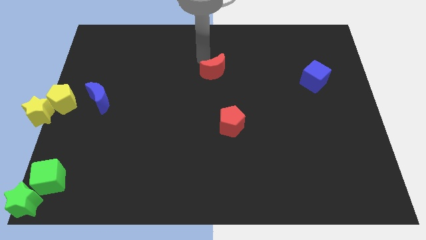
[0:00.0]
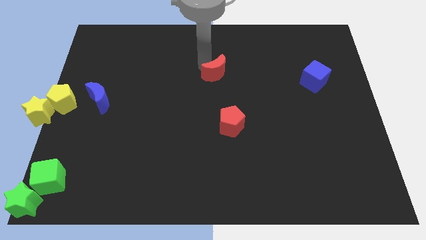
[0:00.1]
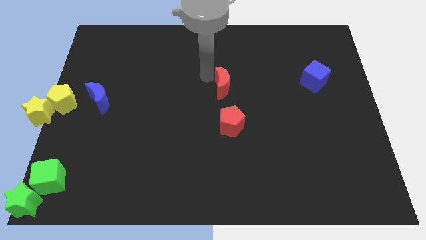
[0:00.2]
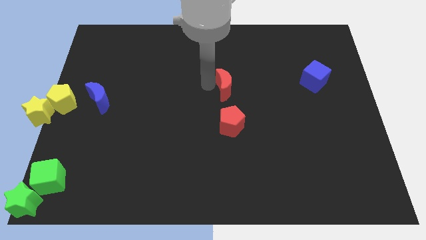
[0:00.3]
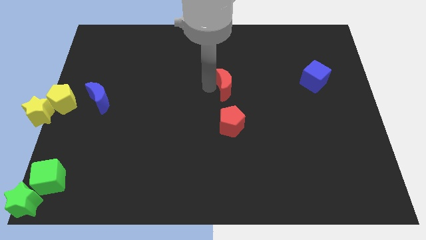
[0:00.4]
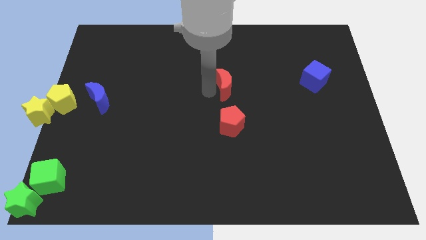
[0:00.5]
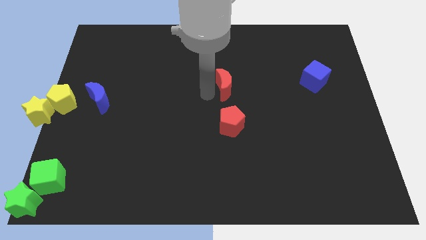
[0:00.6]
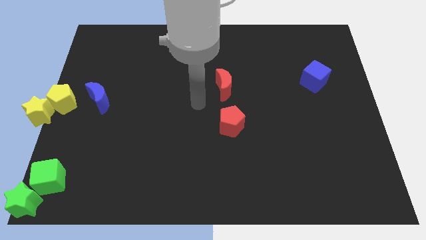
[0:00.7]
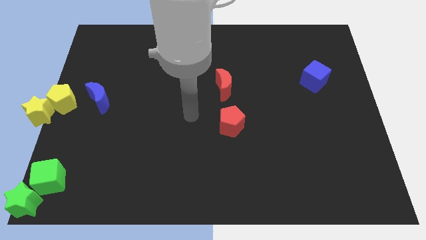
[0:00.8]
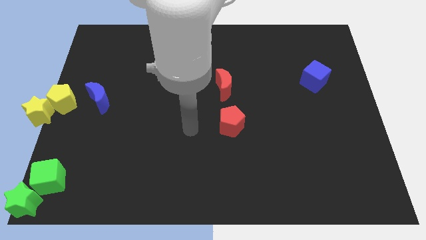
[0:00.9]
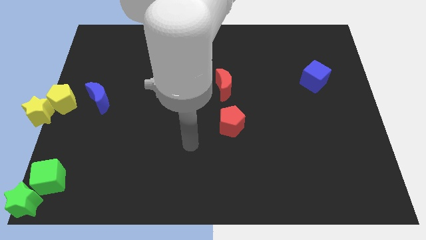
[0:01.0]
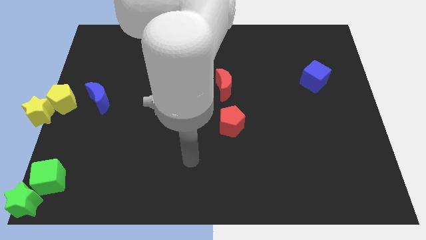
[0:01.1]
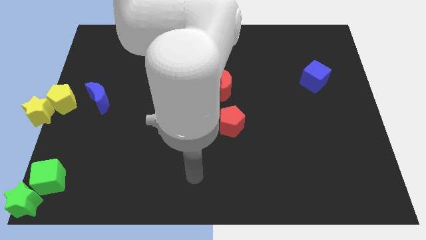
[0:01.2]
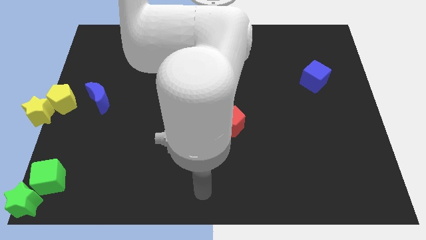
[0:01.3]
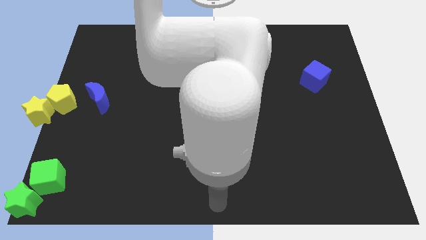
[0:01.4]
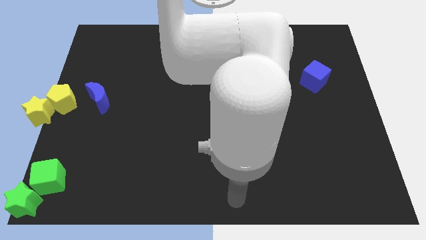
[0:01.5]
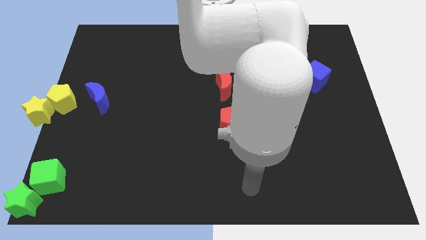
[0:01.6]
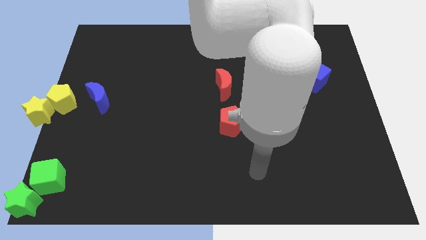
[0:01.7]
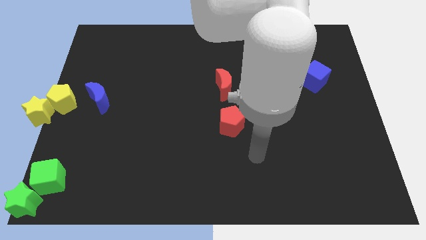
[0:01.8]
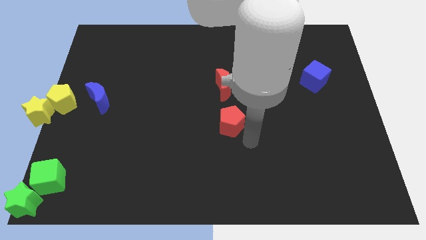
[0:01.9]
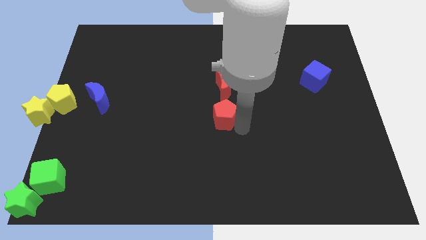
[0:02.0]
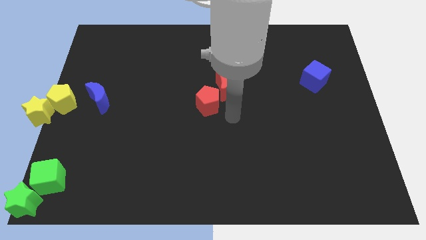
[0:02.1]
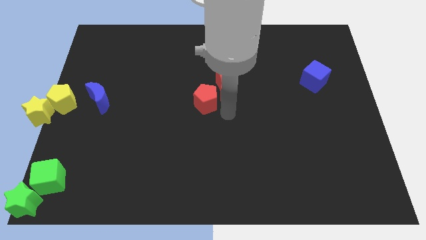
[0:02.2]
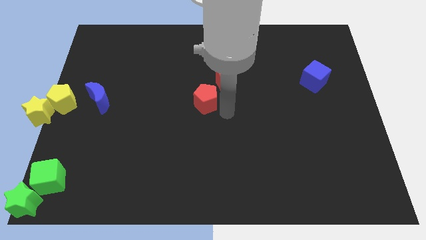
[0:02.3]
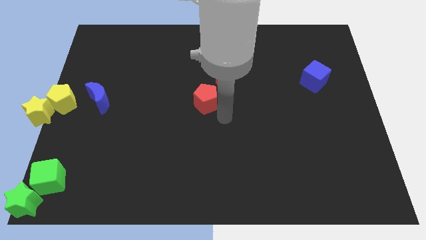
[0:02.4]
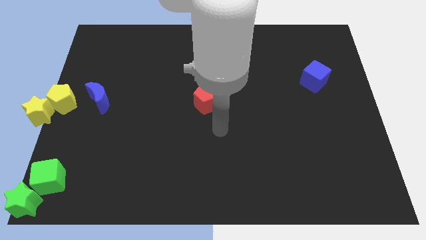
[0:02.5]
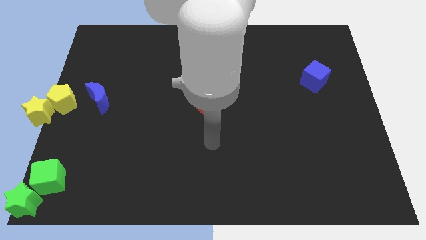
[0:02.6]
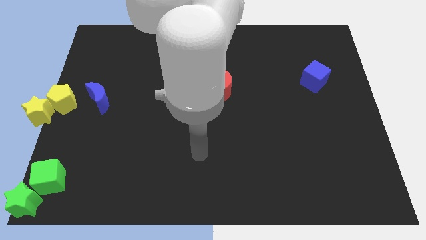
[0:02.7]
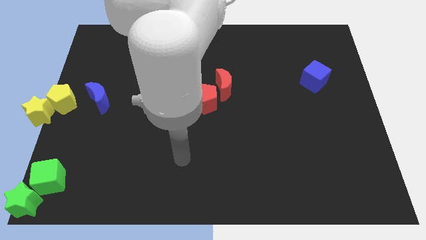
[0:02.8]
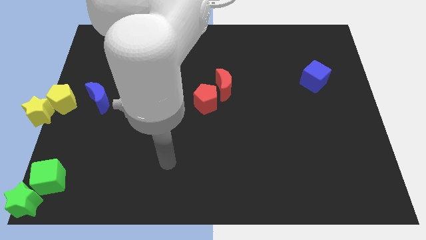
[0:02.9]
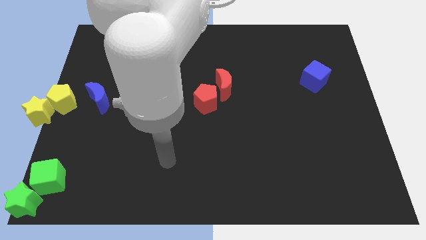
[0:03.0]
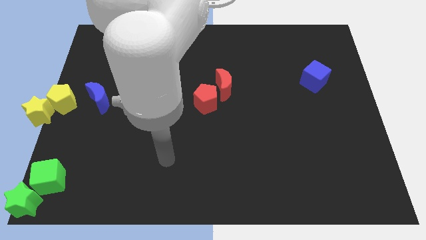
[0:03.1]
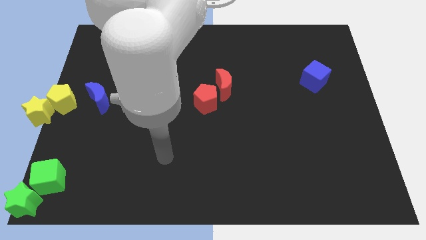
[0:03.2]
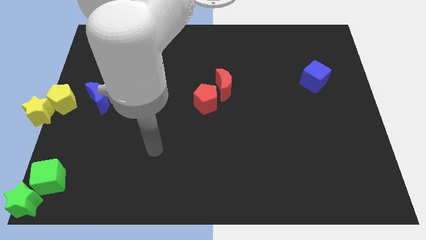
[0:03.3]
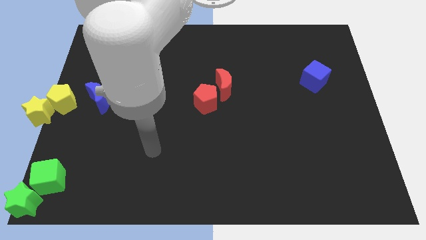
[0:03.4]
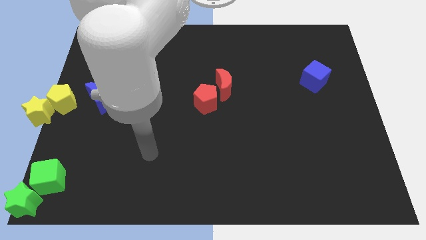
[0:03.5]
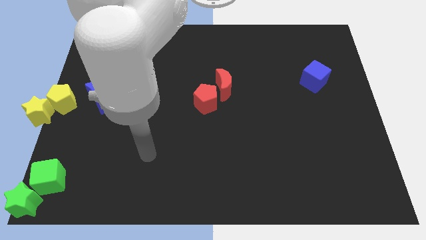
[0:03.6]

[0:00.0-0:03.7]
put red blocks parallel right to the blue crescent

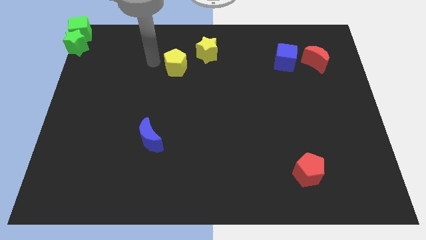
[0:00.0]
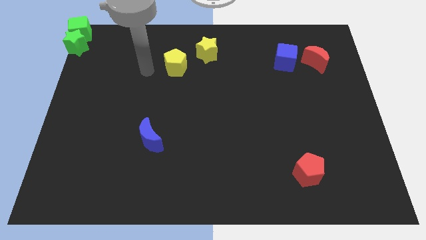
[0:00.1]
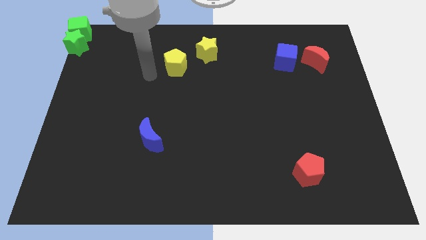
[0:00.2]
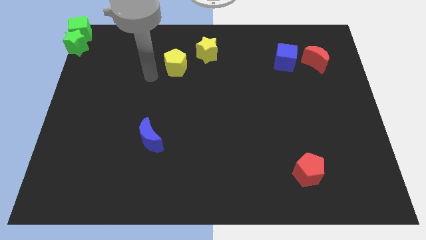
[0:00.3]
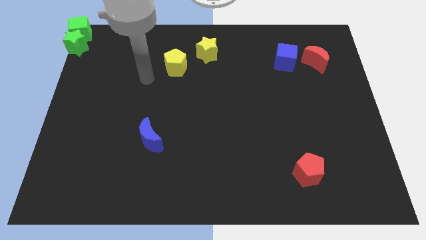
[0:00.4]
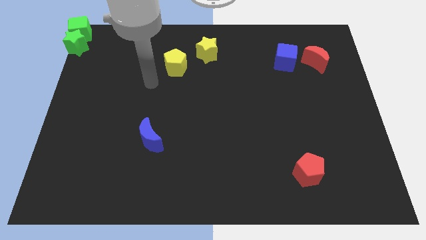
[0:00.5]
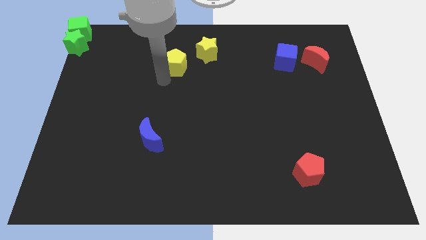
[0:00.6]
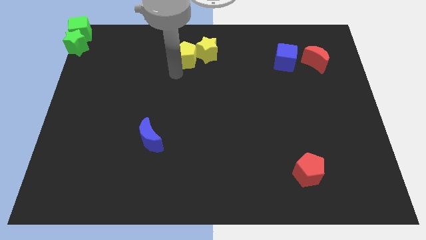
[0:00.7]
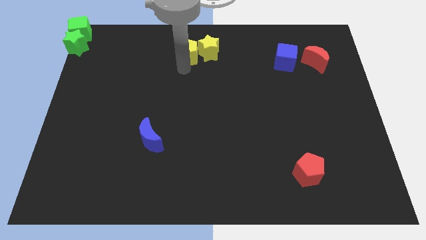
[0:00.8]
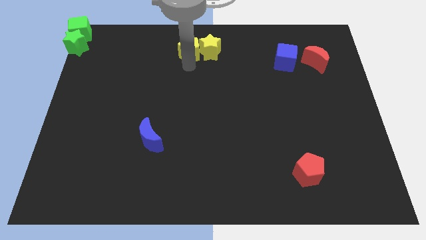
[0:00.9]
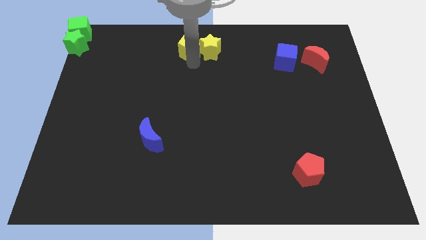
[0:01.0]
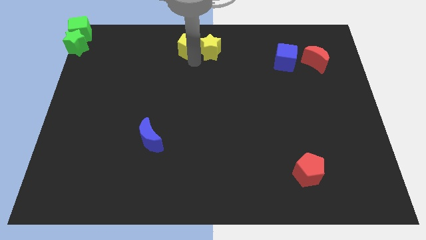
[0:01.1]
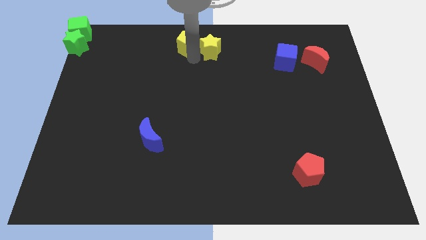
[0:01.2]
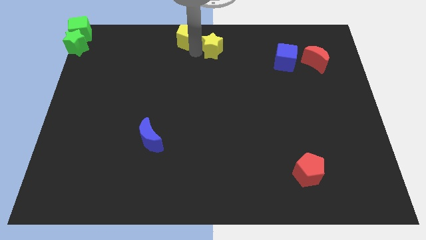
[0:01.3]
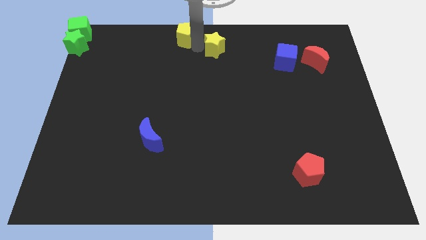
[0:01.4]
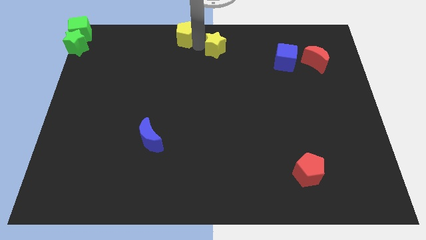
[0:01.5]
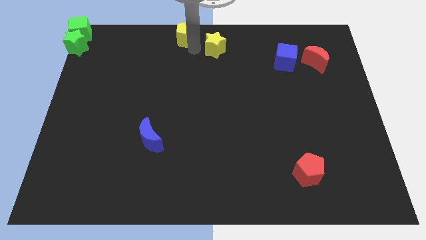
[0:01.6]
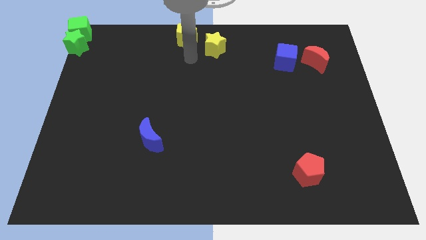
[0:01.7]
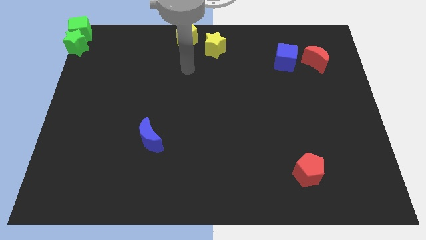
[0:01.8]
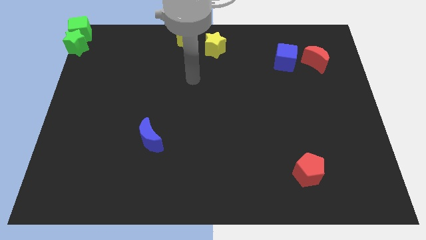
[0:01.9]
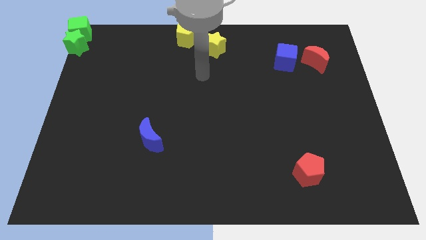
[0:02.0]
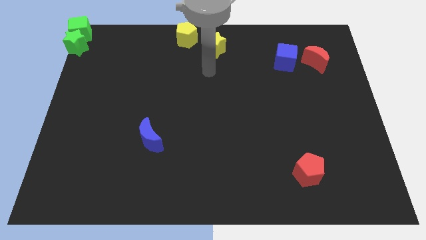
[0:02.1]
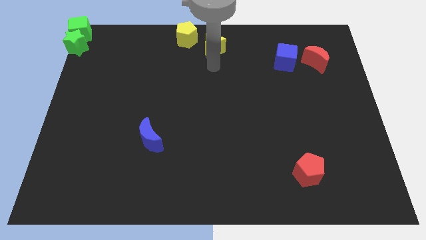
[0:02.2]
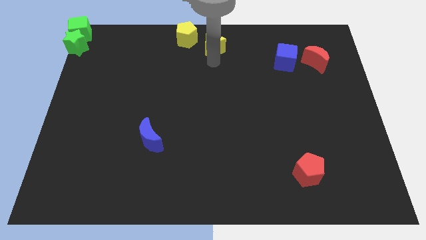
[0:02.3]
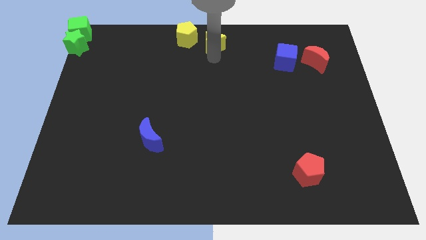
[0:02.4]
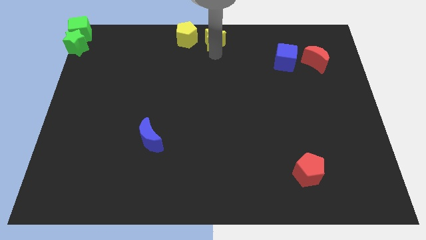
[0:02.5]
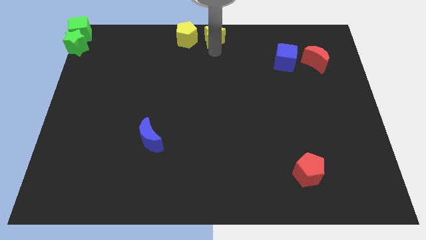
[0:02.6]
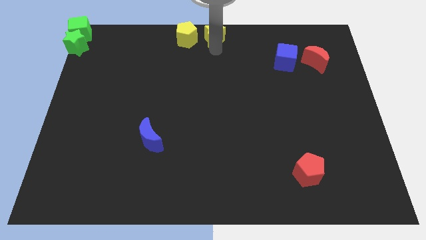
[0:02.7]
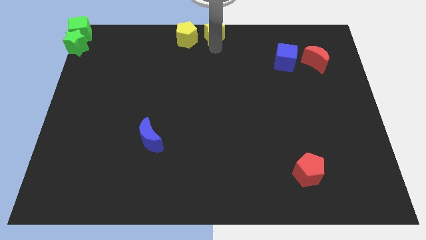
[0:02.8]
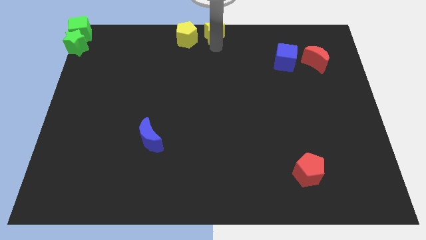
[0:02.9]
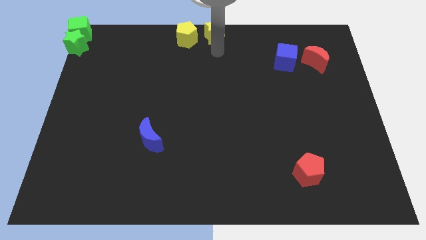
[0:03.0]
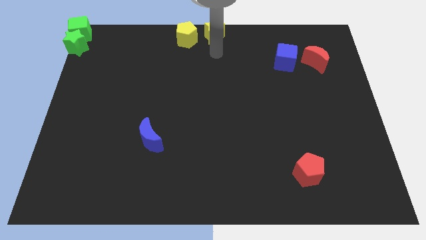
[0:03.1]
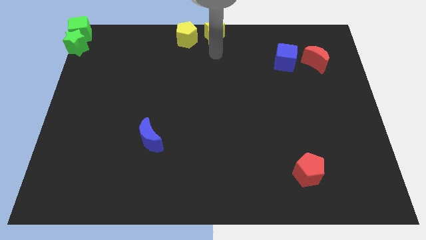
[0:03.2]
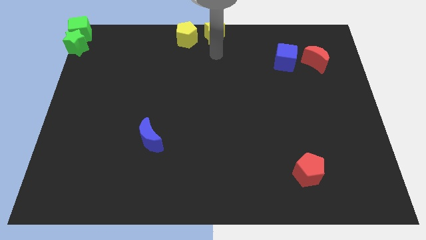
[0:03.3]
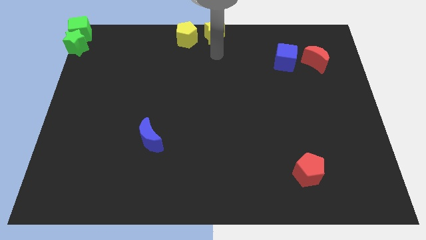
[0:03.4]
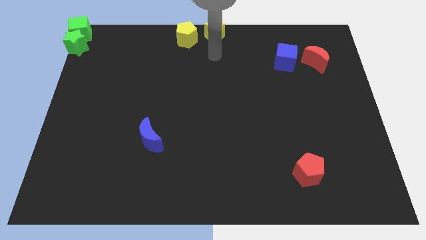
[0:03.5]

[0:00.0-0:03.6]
place the yellow star in the top middle

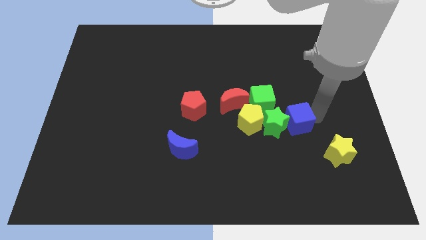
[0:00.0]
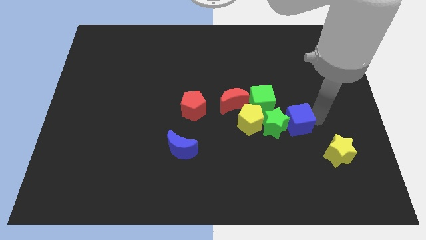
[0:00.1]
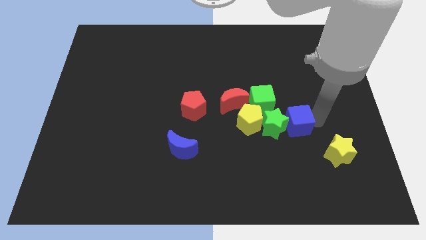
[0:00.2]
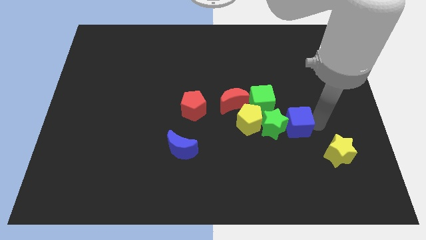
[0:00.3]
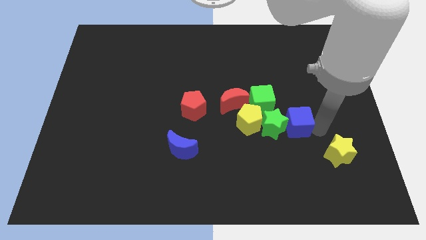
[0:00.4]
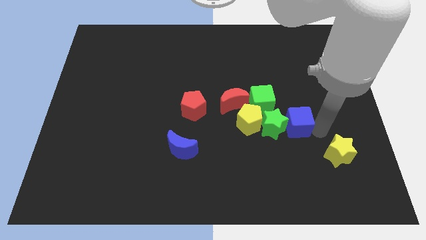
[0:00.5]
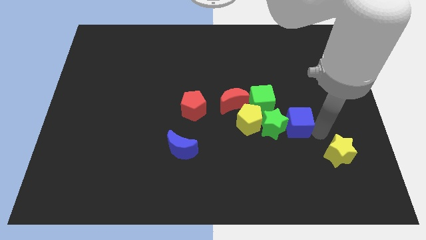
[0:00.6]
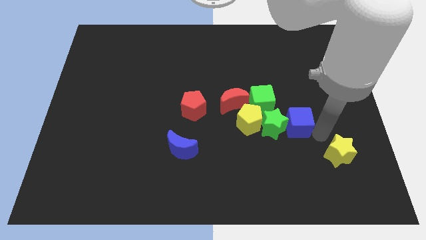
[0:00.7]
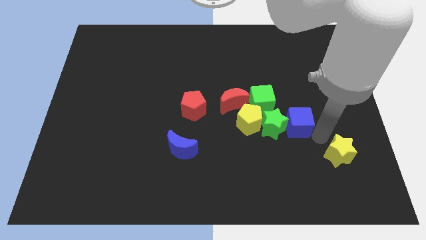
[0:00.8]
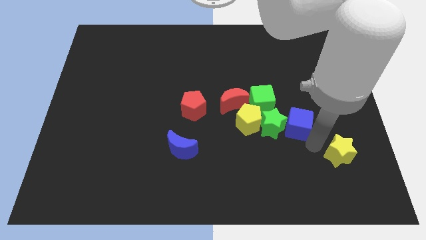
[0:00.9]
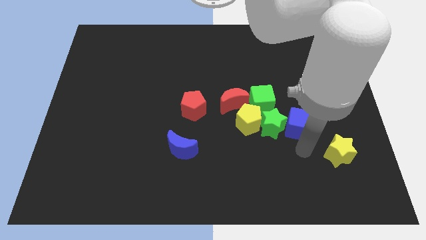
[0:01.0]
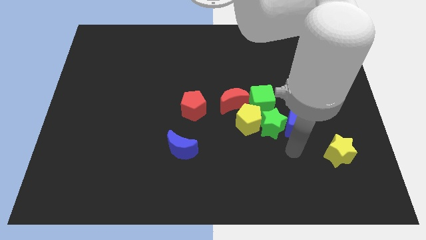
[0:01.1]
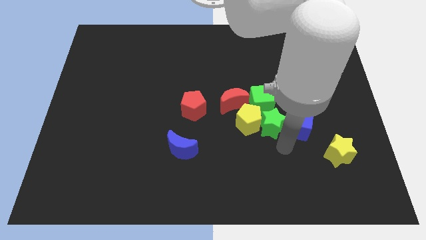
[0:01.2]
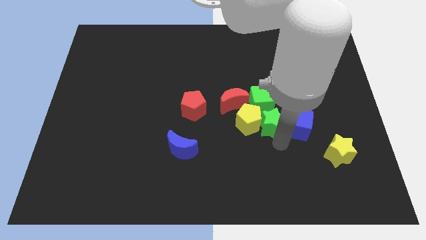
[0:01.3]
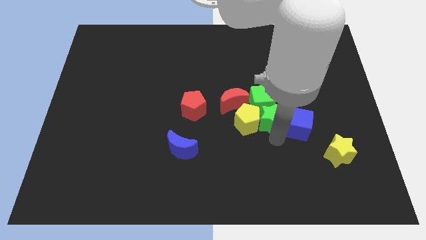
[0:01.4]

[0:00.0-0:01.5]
push green star into green cube

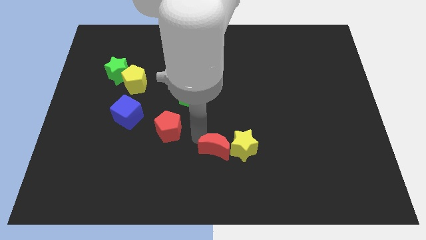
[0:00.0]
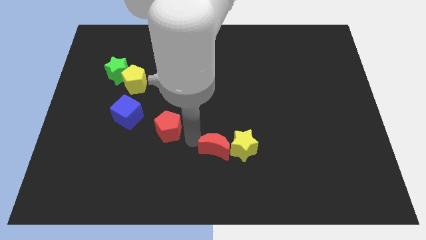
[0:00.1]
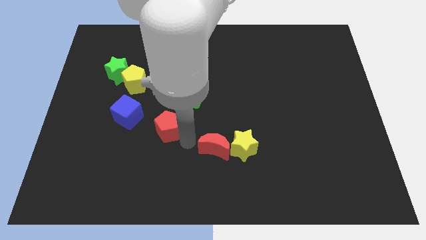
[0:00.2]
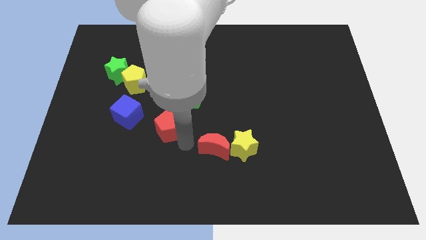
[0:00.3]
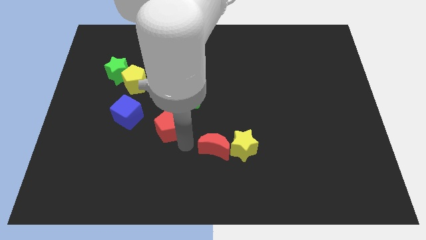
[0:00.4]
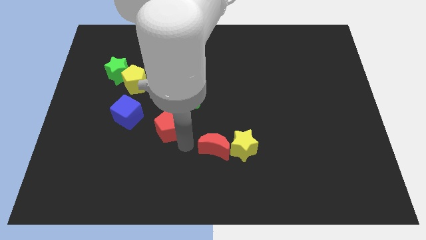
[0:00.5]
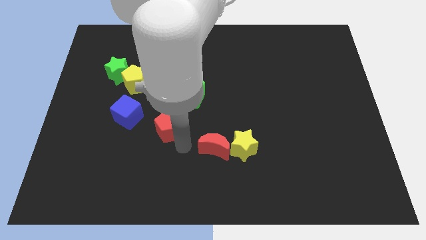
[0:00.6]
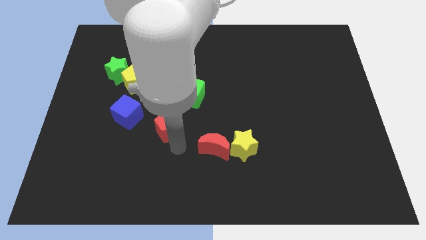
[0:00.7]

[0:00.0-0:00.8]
move the arm to the left of red crescent
